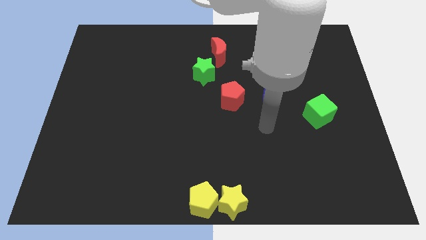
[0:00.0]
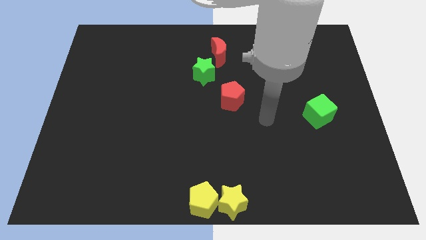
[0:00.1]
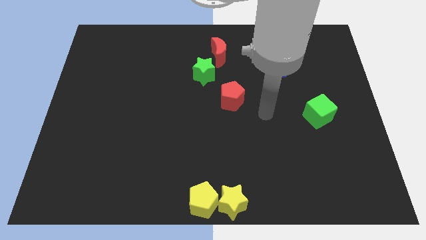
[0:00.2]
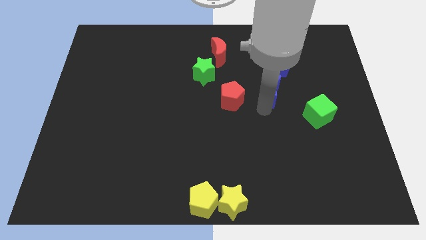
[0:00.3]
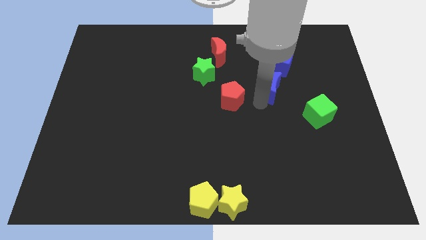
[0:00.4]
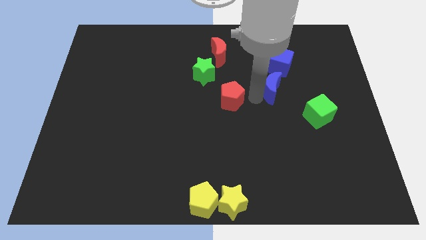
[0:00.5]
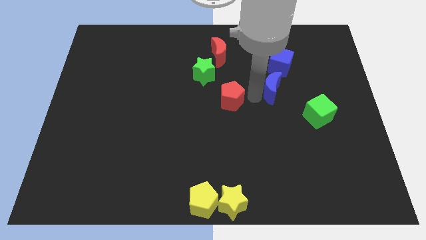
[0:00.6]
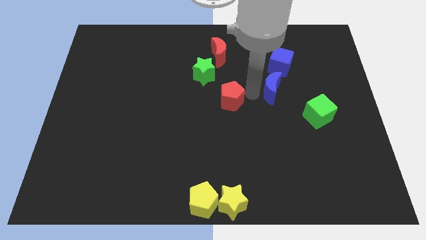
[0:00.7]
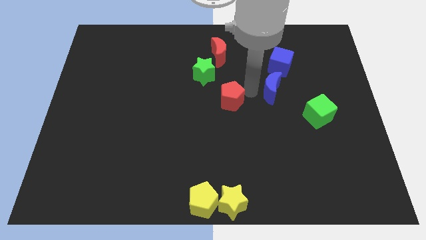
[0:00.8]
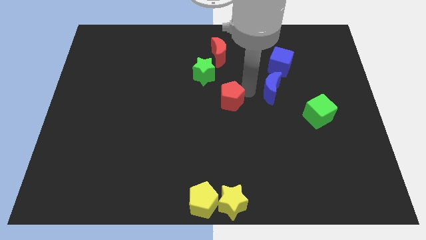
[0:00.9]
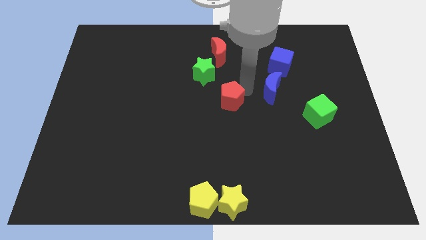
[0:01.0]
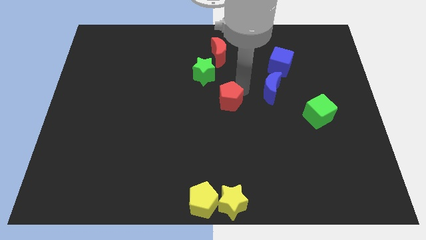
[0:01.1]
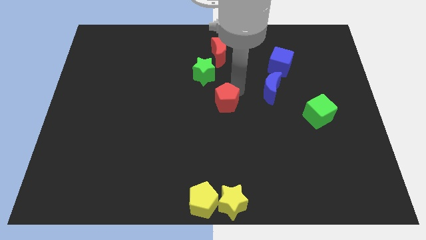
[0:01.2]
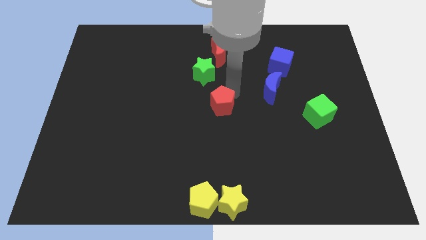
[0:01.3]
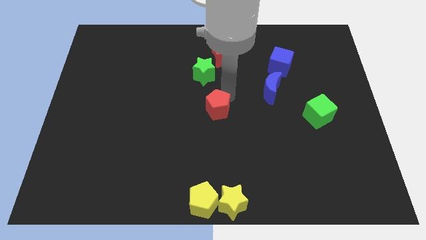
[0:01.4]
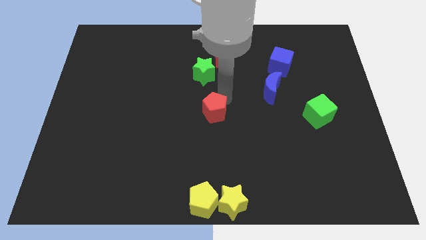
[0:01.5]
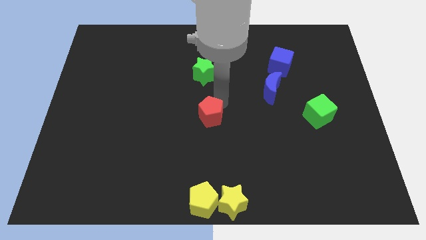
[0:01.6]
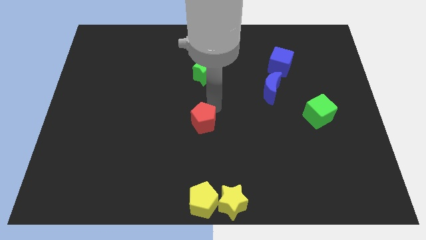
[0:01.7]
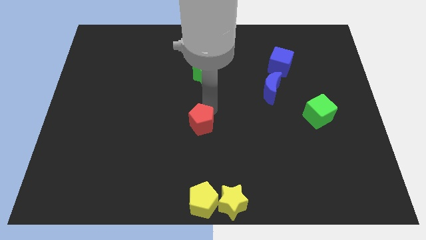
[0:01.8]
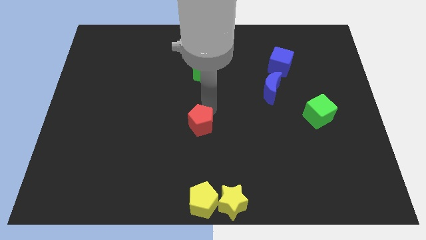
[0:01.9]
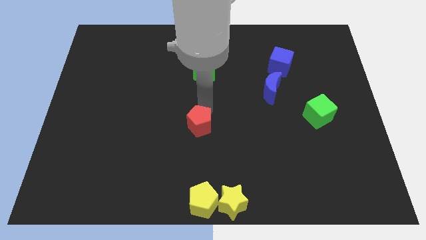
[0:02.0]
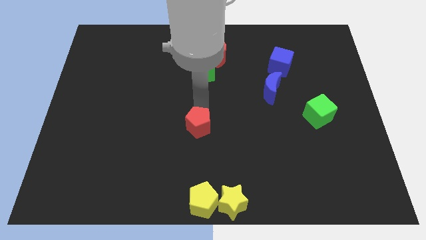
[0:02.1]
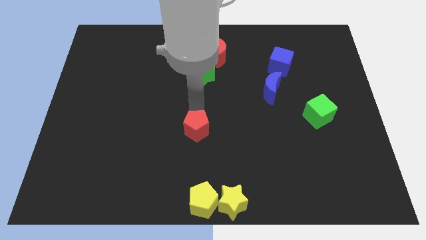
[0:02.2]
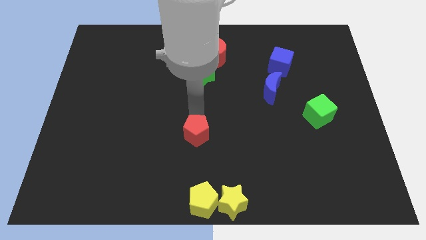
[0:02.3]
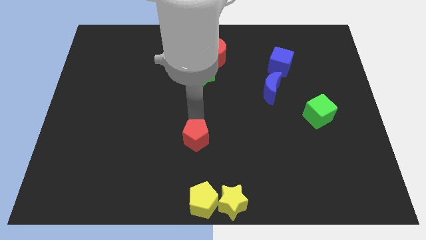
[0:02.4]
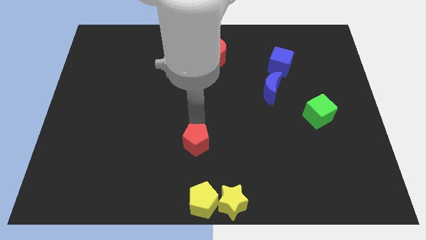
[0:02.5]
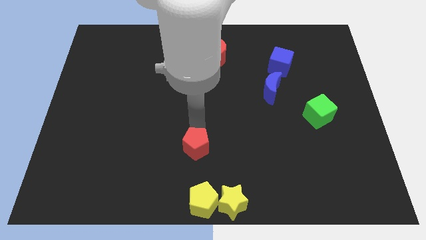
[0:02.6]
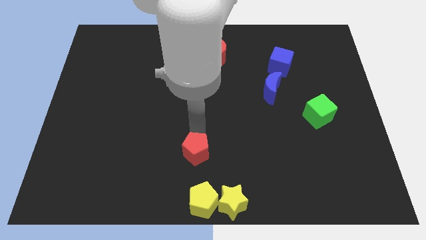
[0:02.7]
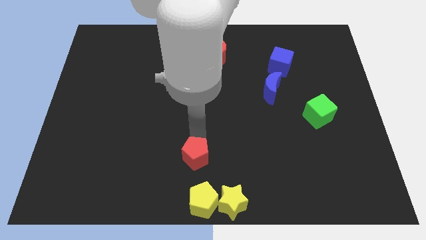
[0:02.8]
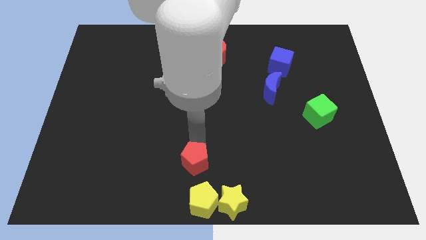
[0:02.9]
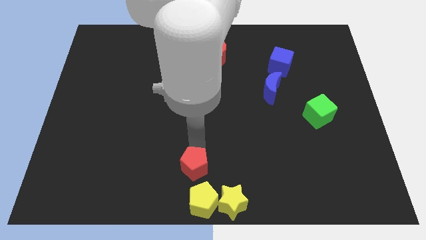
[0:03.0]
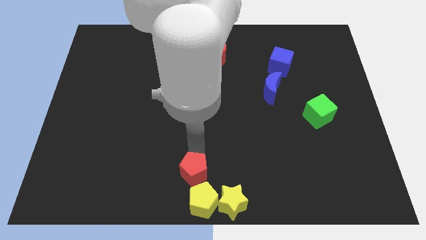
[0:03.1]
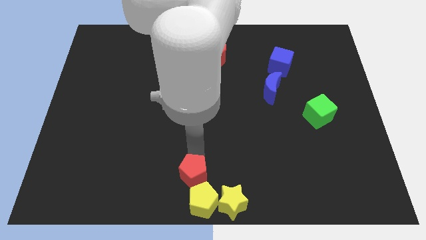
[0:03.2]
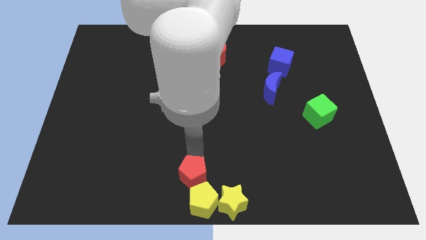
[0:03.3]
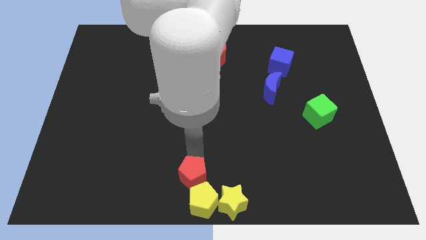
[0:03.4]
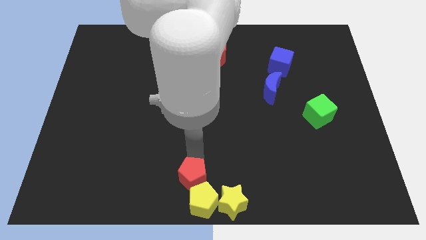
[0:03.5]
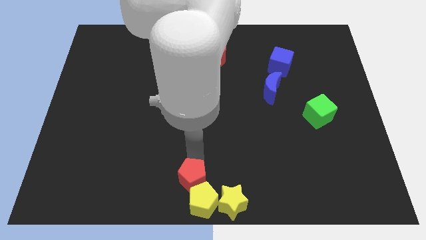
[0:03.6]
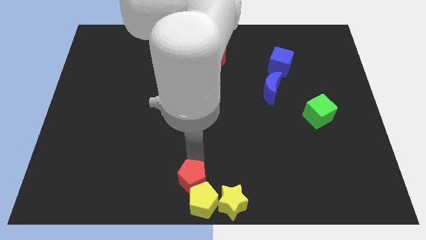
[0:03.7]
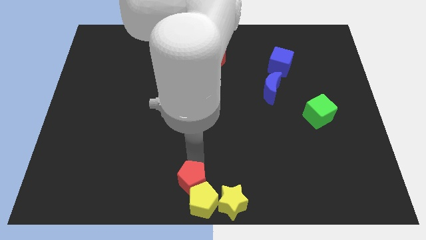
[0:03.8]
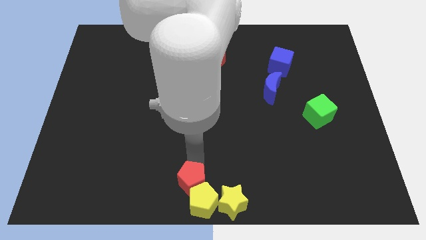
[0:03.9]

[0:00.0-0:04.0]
move the red pentagon into the yellow pentagon

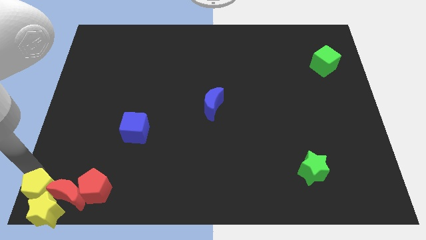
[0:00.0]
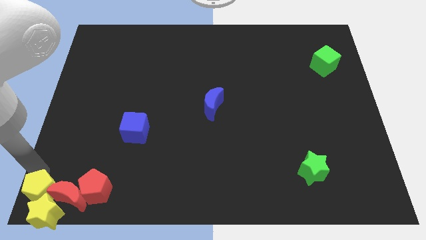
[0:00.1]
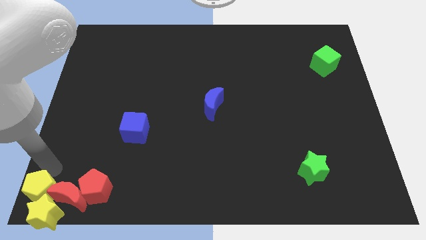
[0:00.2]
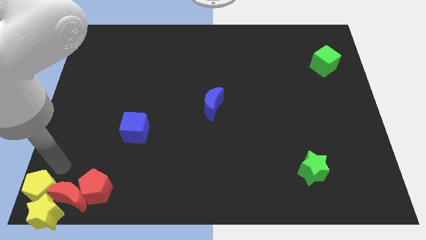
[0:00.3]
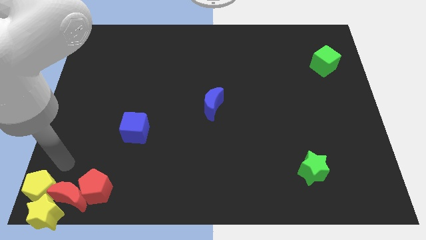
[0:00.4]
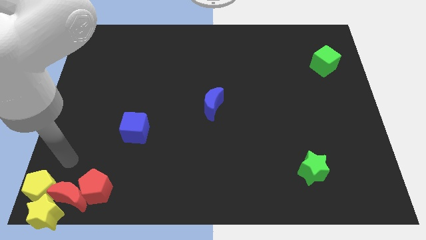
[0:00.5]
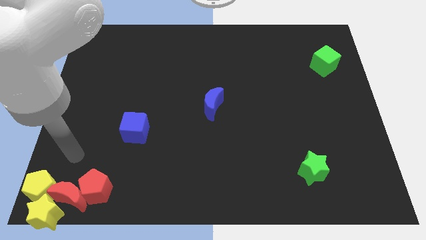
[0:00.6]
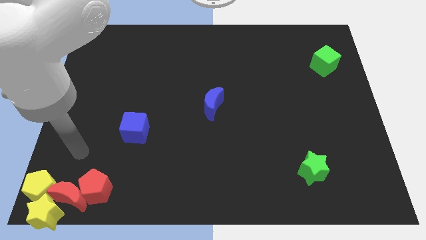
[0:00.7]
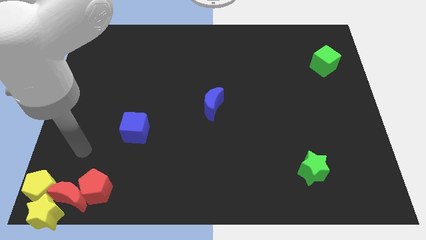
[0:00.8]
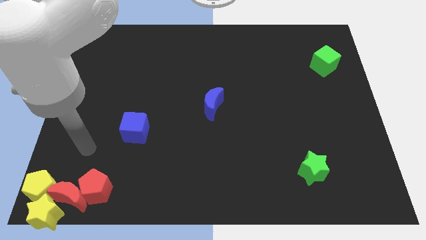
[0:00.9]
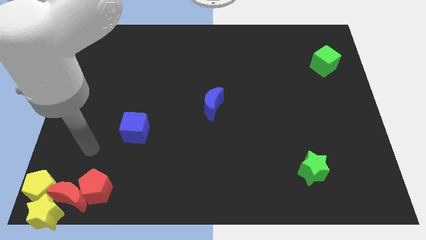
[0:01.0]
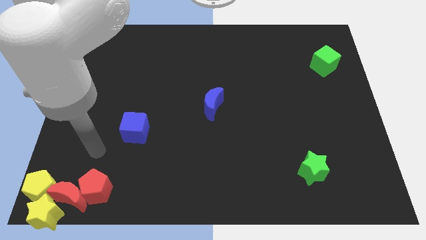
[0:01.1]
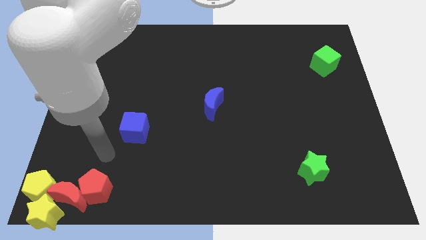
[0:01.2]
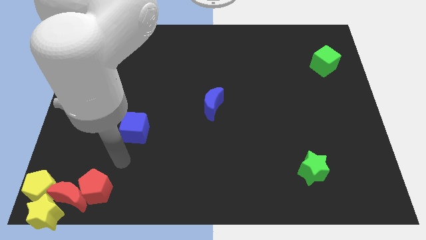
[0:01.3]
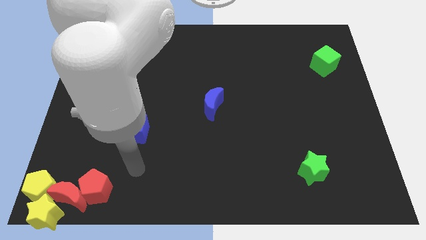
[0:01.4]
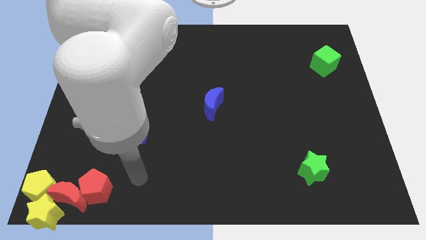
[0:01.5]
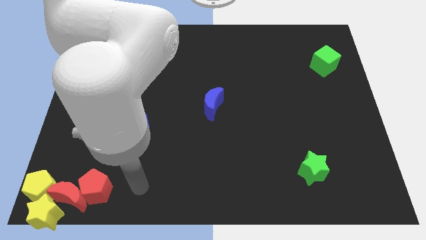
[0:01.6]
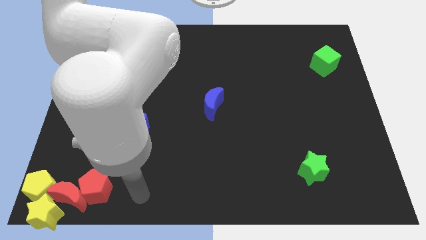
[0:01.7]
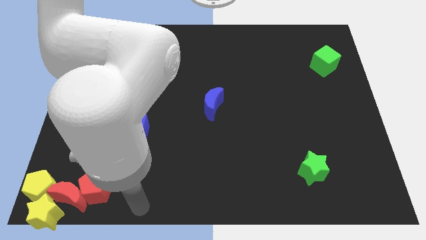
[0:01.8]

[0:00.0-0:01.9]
move your away from the yellow pentagon

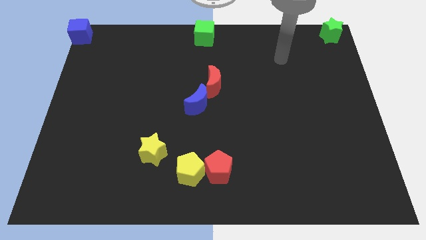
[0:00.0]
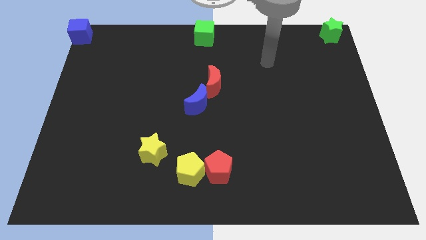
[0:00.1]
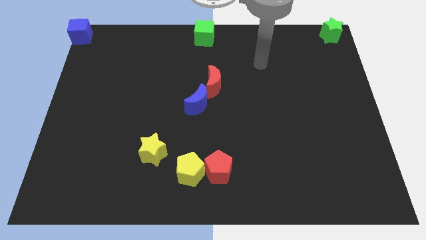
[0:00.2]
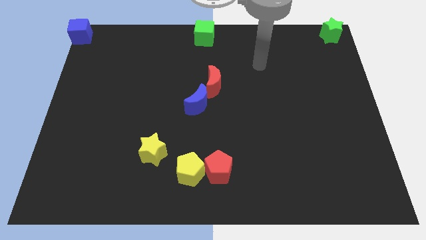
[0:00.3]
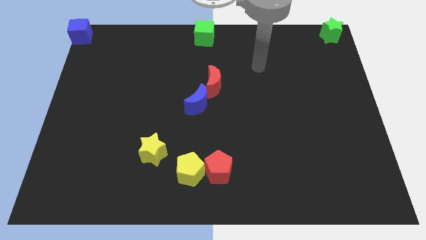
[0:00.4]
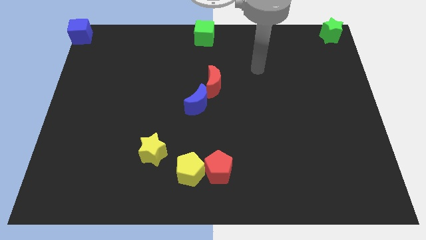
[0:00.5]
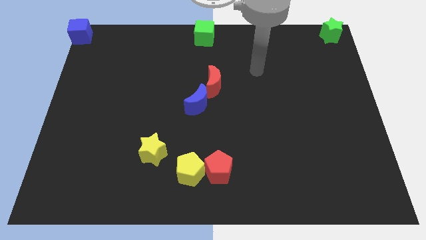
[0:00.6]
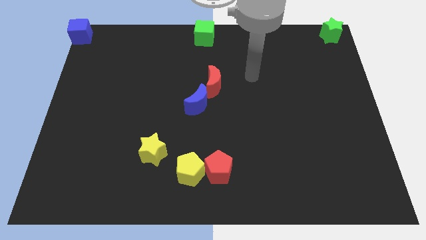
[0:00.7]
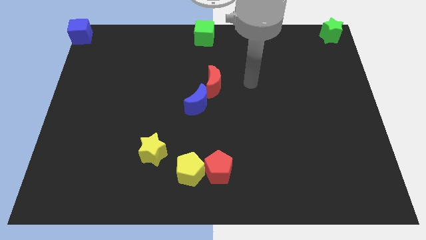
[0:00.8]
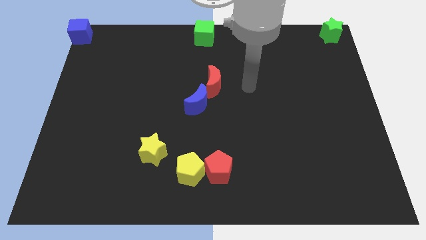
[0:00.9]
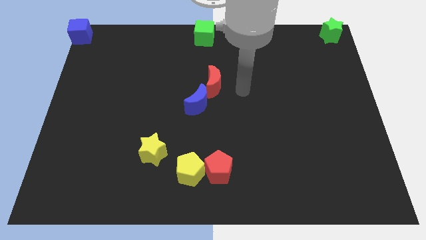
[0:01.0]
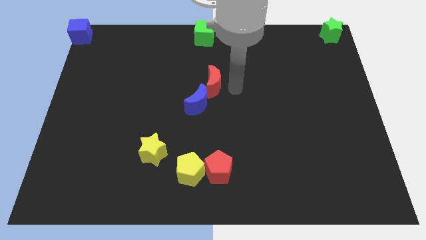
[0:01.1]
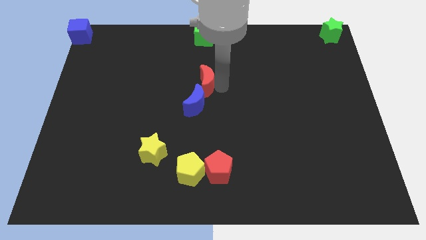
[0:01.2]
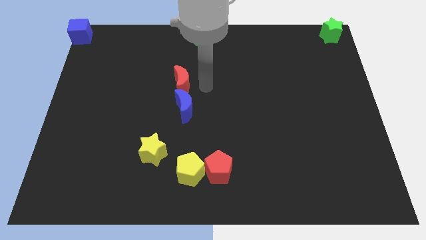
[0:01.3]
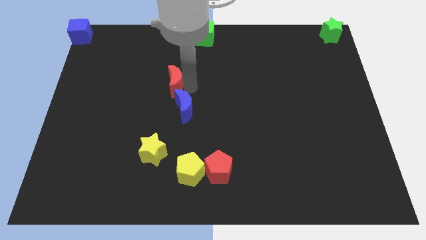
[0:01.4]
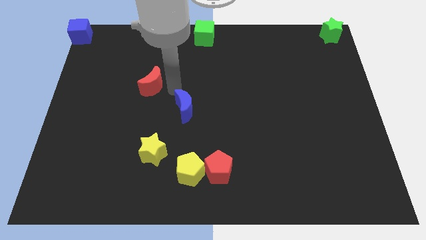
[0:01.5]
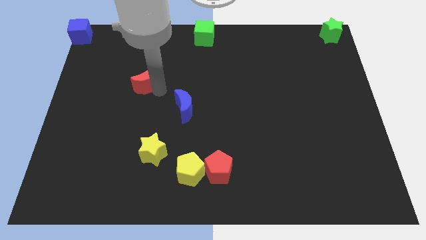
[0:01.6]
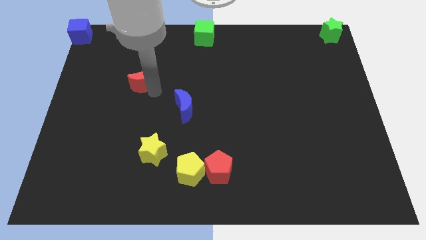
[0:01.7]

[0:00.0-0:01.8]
push the red moon above yellow star

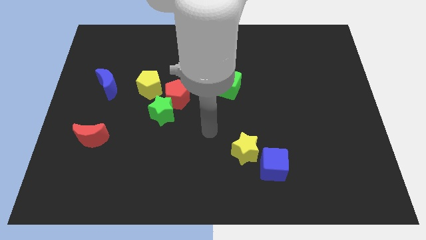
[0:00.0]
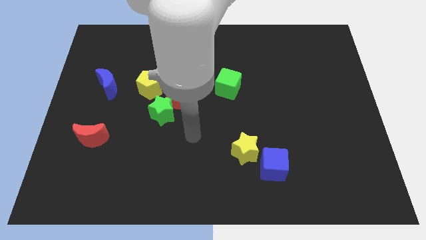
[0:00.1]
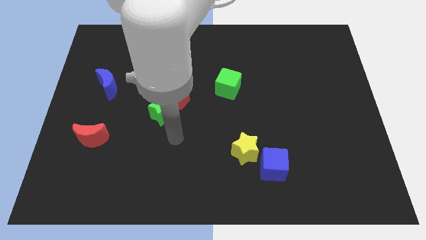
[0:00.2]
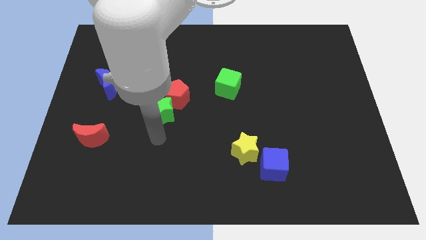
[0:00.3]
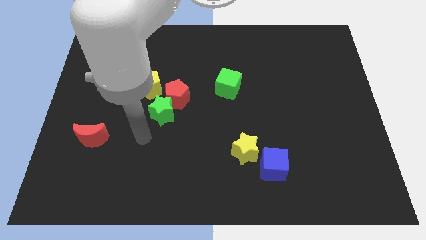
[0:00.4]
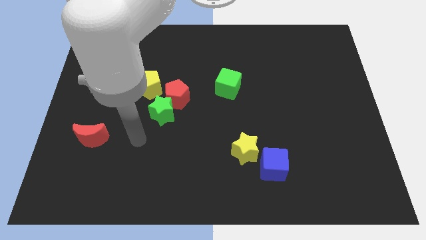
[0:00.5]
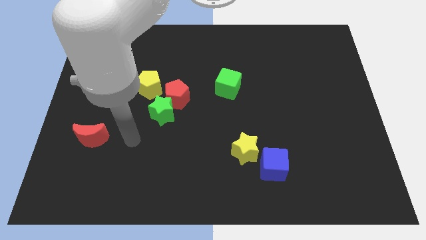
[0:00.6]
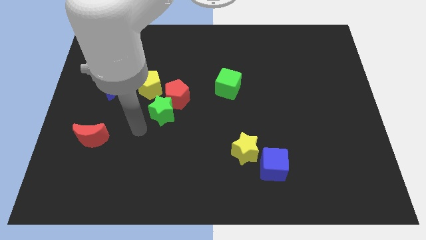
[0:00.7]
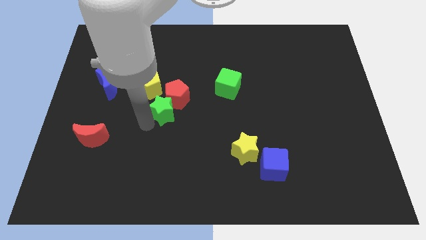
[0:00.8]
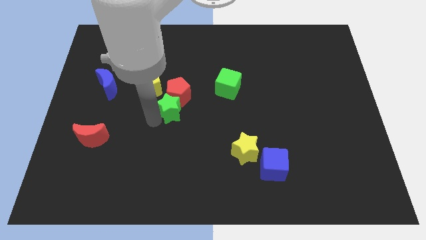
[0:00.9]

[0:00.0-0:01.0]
touch the green star with your arm

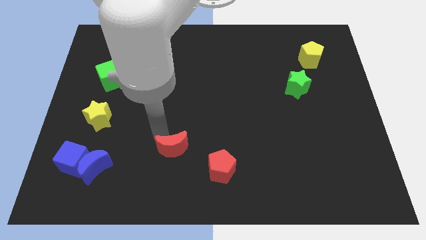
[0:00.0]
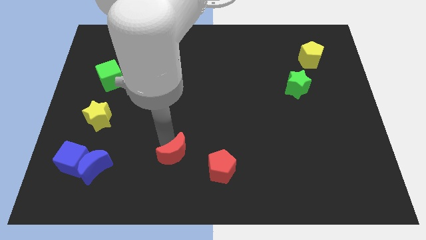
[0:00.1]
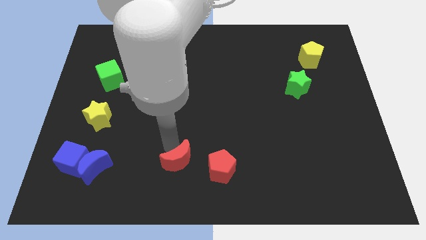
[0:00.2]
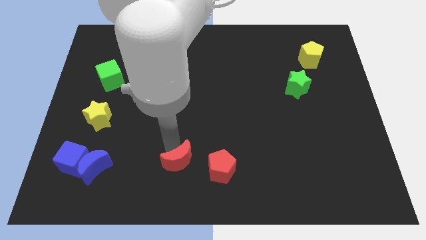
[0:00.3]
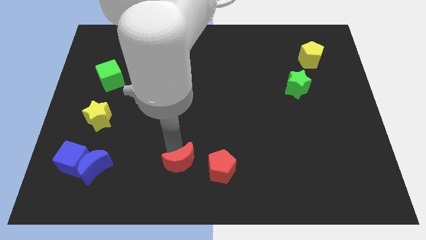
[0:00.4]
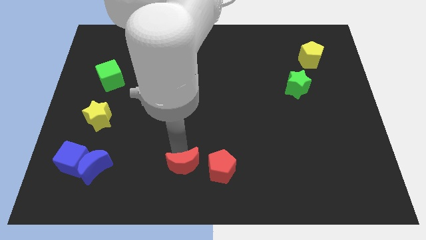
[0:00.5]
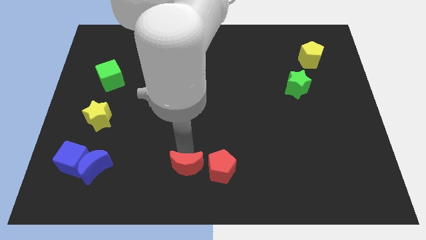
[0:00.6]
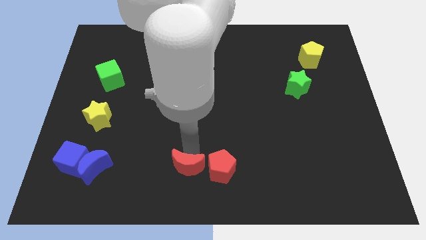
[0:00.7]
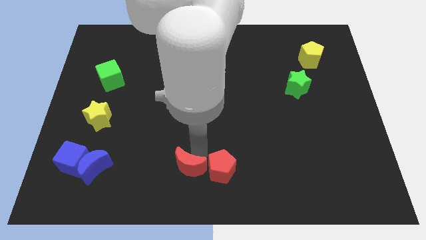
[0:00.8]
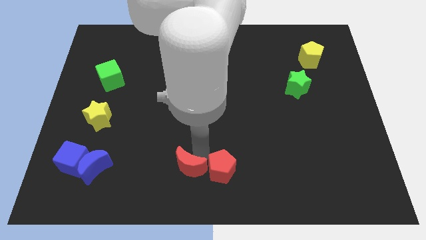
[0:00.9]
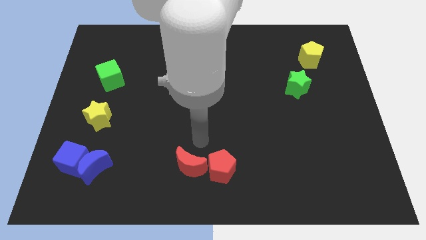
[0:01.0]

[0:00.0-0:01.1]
slide the red crescent close to the left side of the red pentagon
